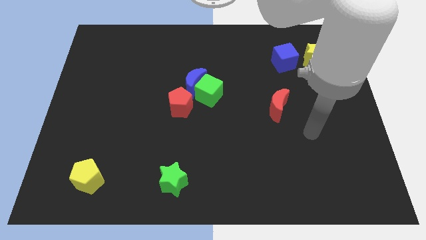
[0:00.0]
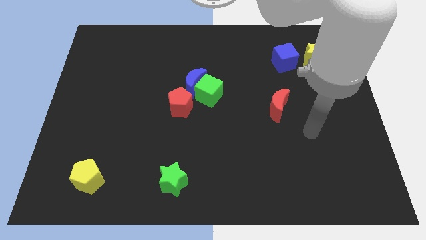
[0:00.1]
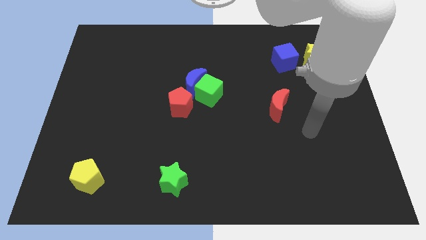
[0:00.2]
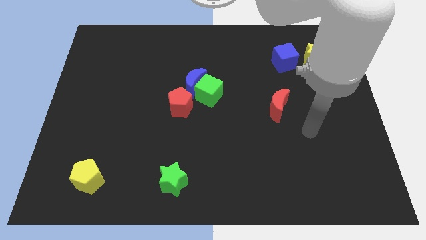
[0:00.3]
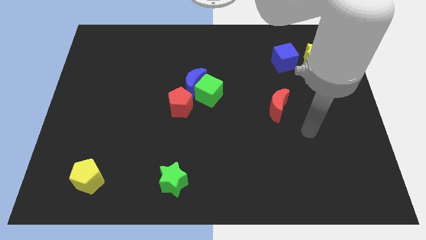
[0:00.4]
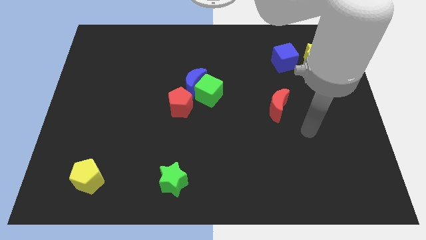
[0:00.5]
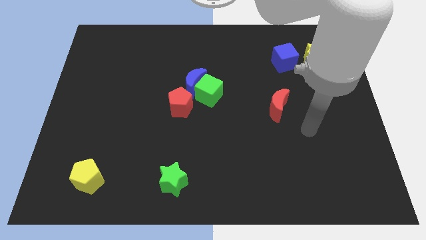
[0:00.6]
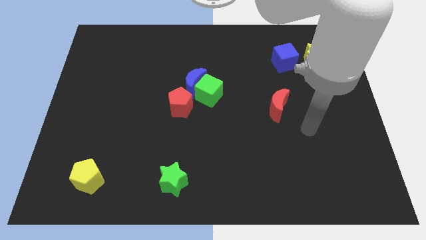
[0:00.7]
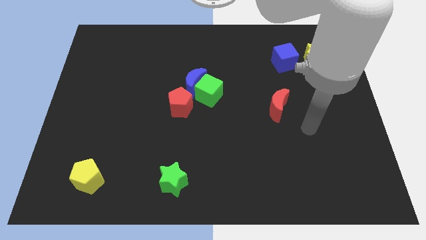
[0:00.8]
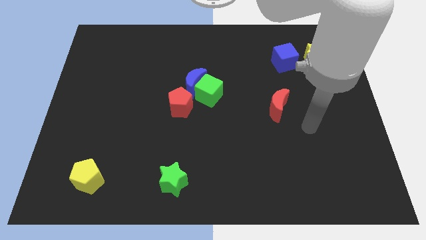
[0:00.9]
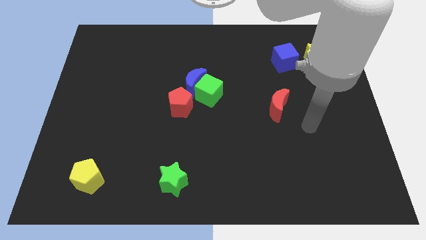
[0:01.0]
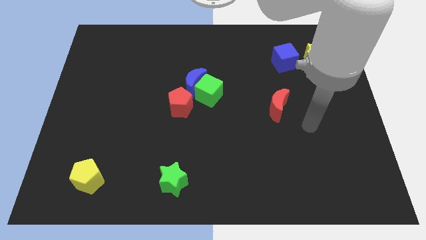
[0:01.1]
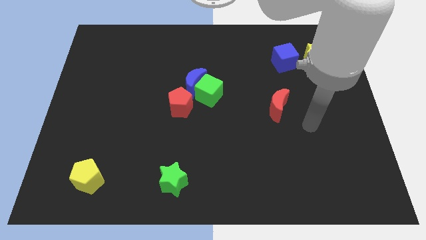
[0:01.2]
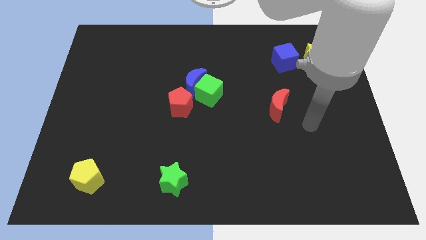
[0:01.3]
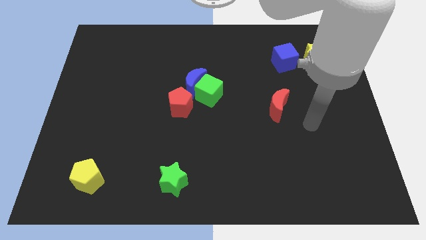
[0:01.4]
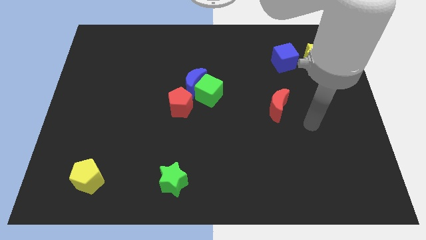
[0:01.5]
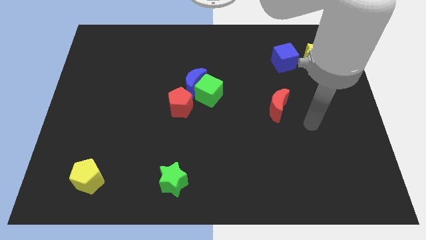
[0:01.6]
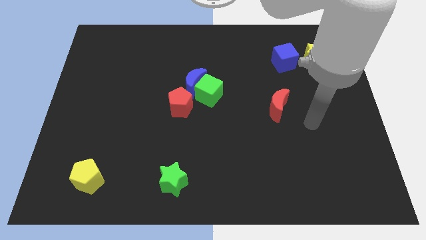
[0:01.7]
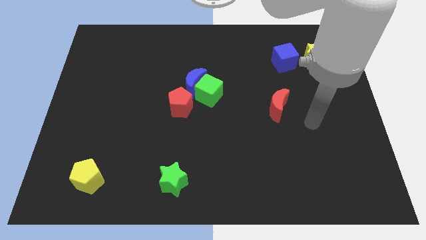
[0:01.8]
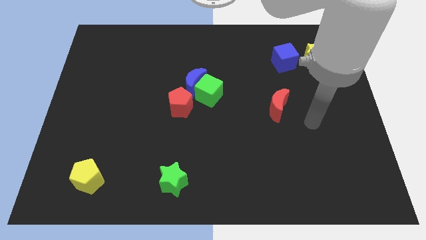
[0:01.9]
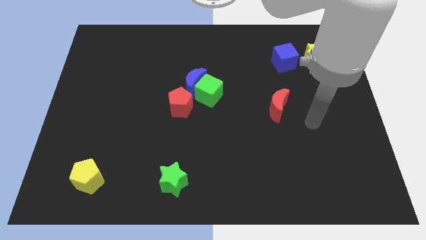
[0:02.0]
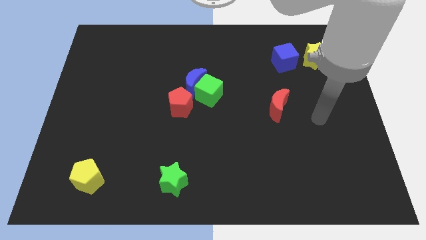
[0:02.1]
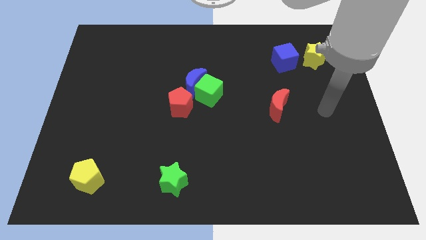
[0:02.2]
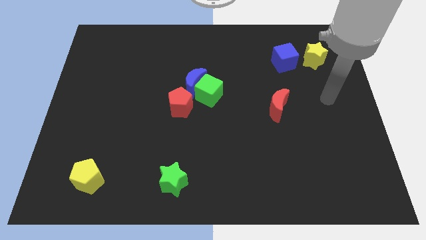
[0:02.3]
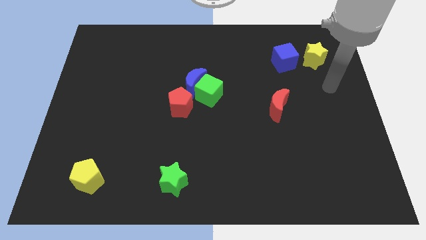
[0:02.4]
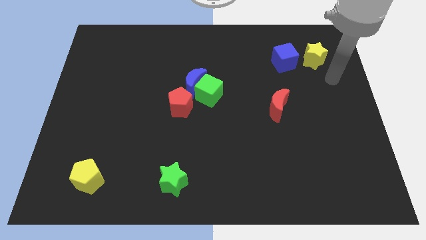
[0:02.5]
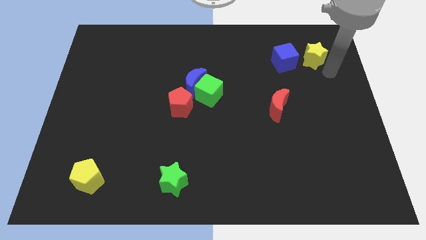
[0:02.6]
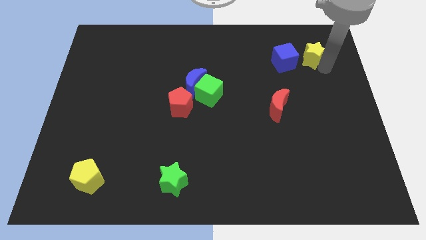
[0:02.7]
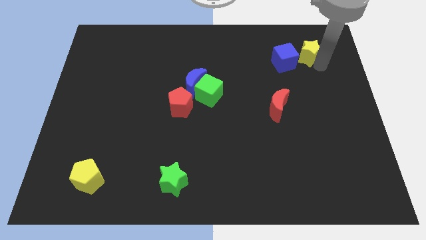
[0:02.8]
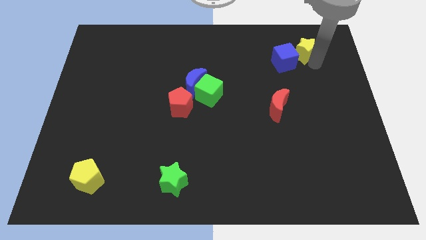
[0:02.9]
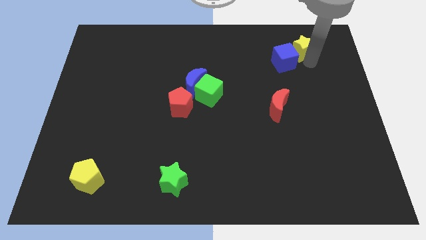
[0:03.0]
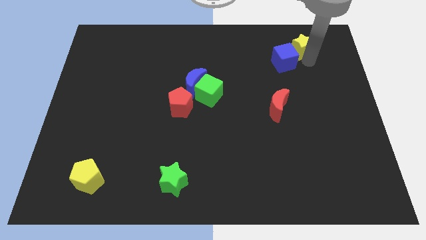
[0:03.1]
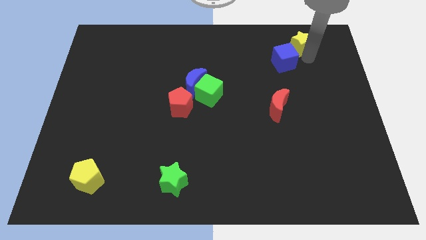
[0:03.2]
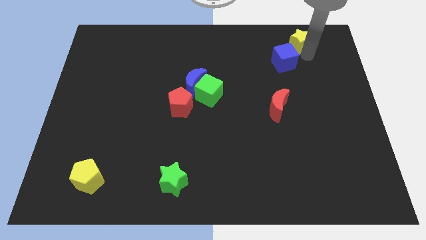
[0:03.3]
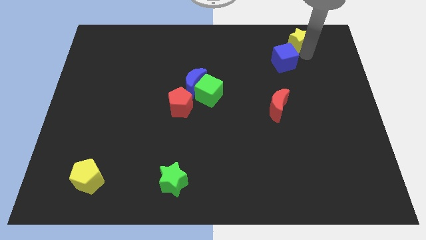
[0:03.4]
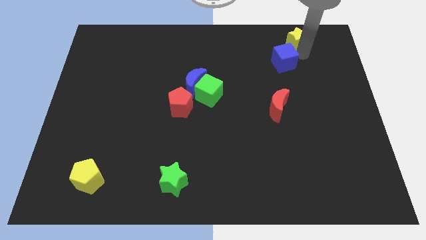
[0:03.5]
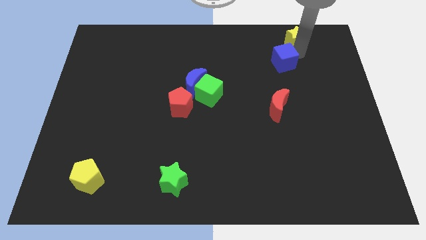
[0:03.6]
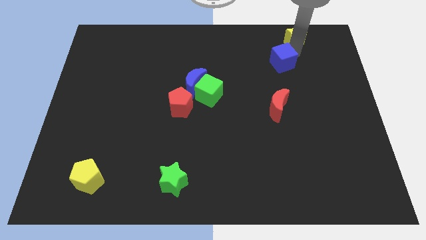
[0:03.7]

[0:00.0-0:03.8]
move the yellow star to the top right side of the blue cube

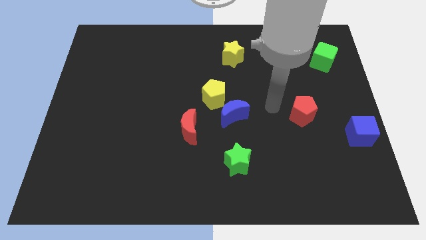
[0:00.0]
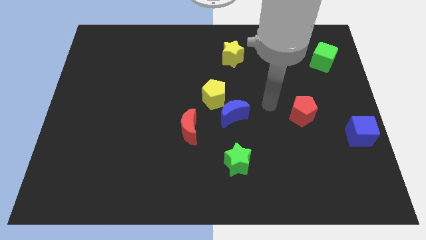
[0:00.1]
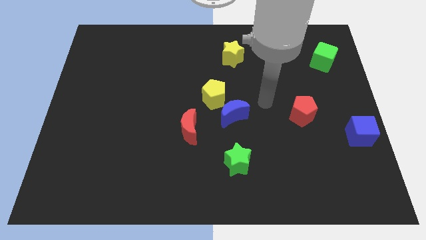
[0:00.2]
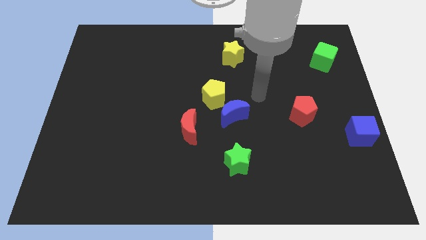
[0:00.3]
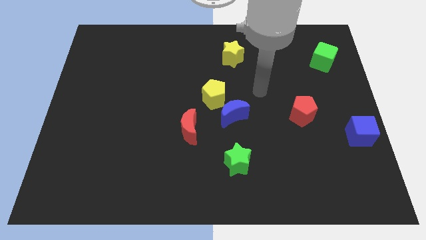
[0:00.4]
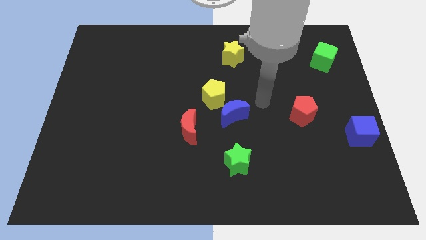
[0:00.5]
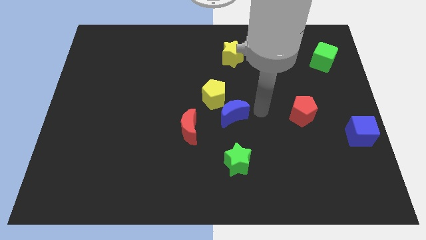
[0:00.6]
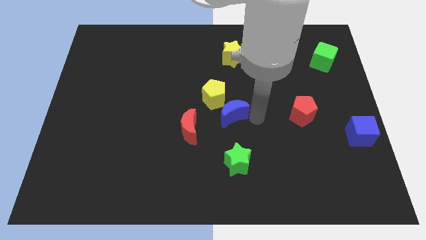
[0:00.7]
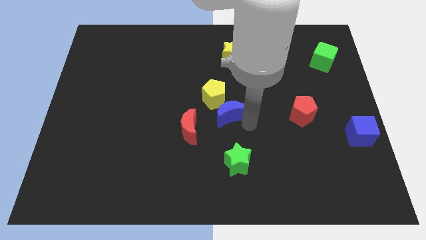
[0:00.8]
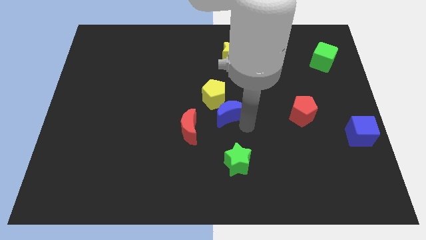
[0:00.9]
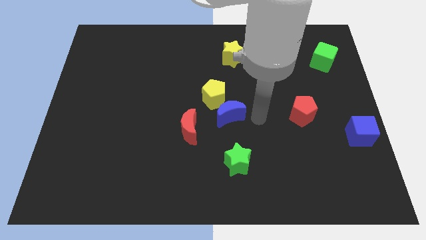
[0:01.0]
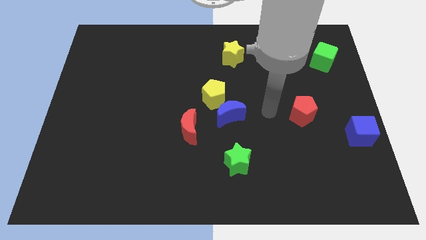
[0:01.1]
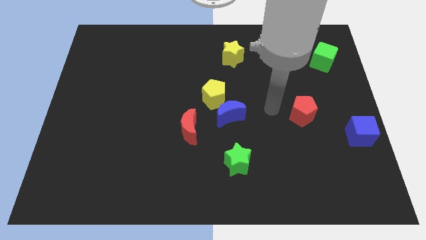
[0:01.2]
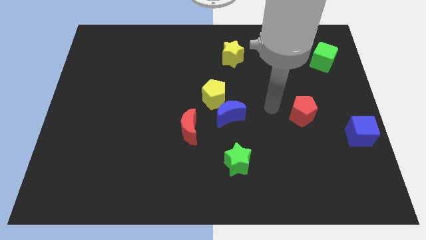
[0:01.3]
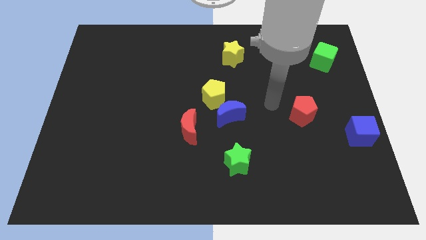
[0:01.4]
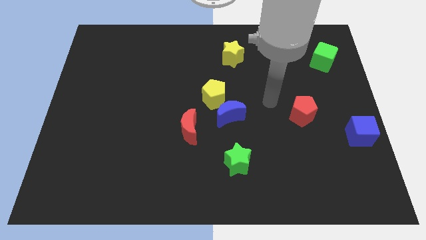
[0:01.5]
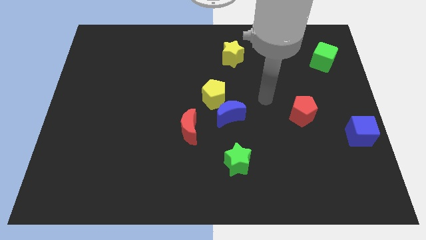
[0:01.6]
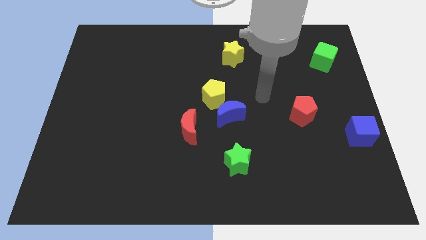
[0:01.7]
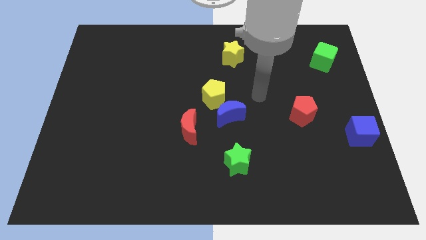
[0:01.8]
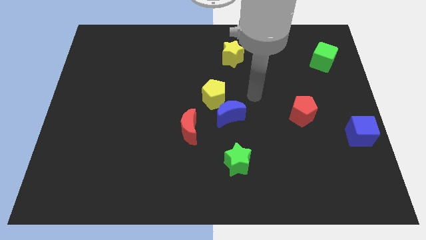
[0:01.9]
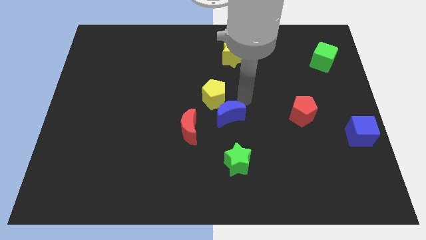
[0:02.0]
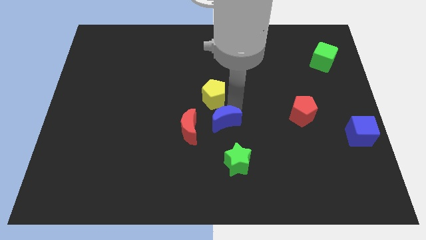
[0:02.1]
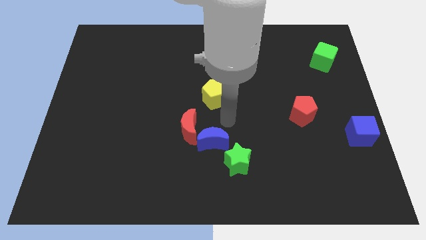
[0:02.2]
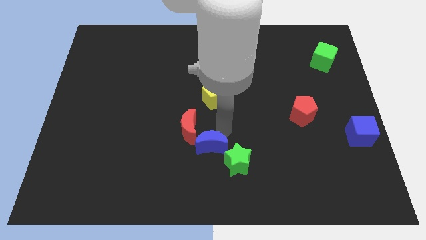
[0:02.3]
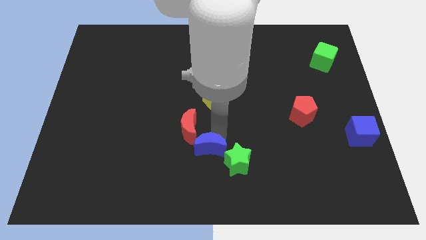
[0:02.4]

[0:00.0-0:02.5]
place the blue crescent between the red crescent and green star

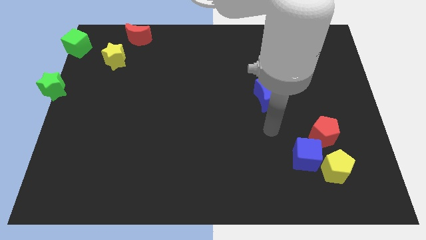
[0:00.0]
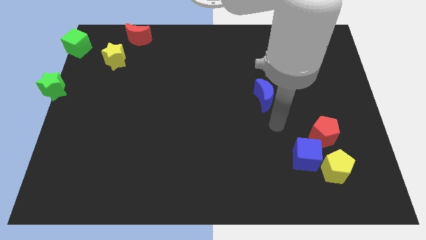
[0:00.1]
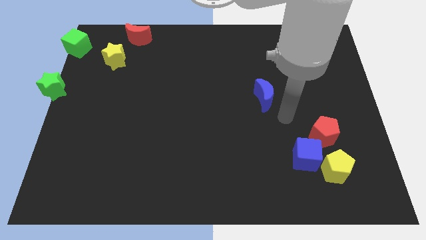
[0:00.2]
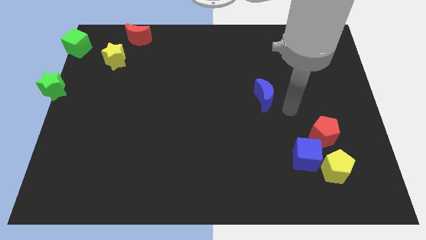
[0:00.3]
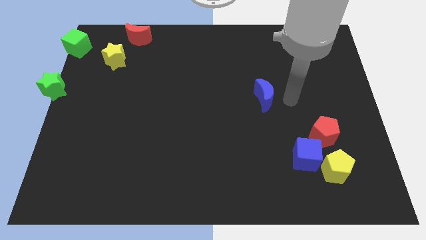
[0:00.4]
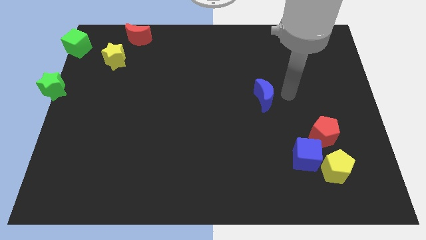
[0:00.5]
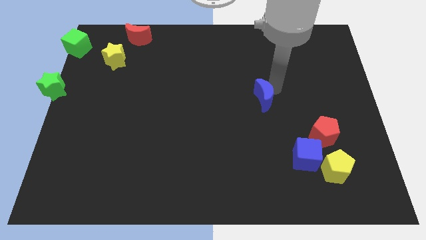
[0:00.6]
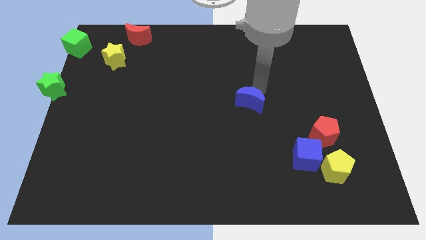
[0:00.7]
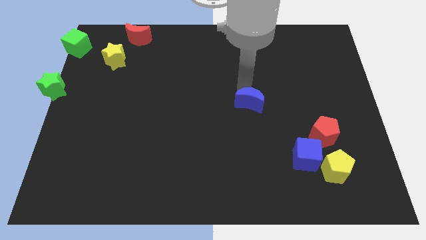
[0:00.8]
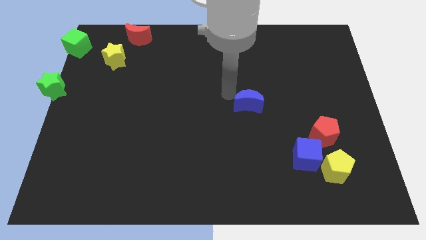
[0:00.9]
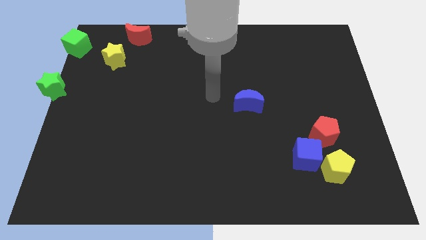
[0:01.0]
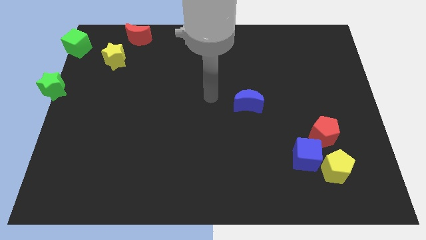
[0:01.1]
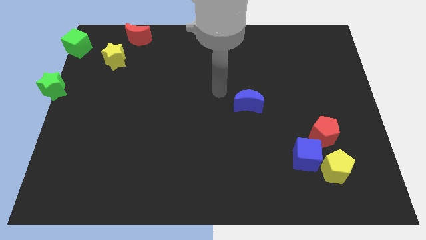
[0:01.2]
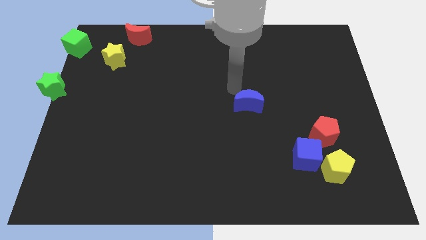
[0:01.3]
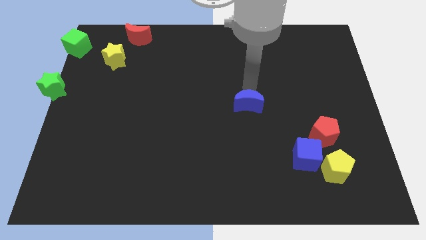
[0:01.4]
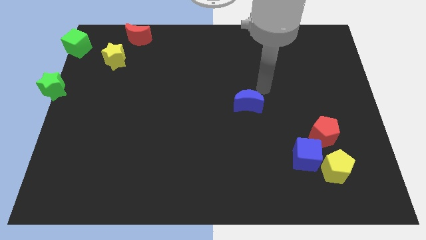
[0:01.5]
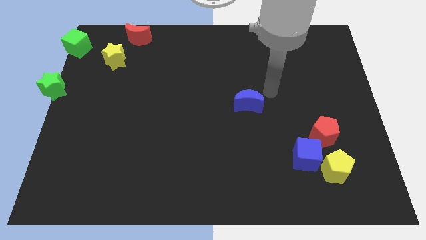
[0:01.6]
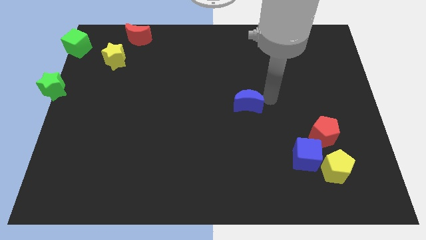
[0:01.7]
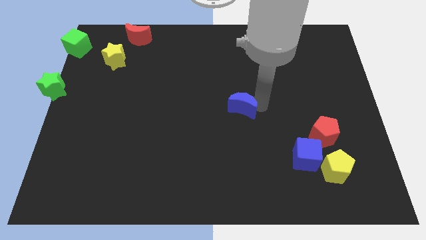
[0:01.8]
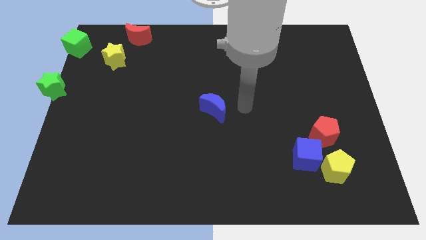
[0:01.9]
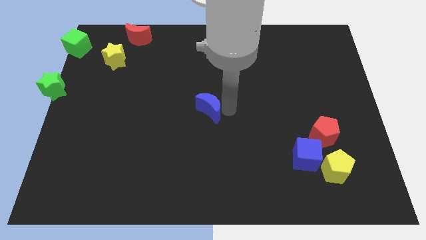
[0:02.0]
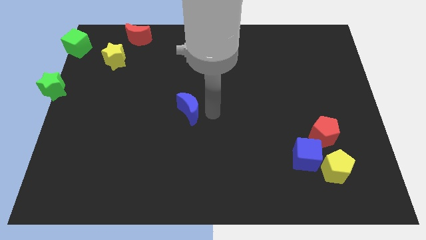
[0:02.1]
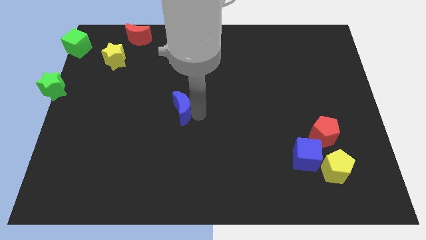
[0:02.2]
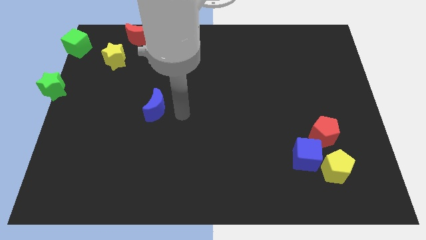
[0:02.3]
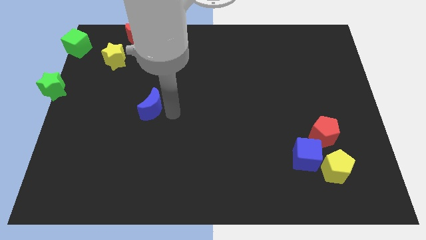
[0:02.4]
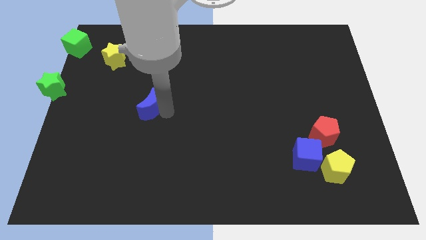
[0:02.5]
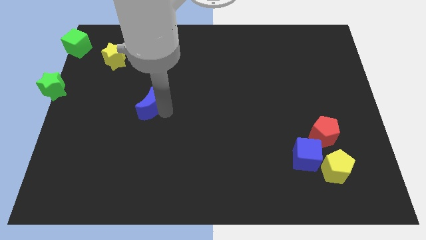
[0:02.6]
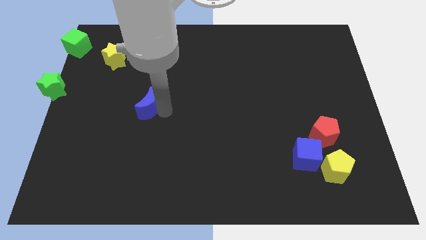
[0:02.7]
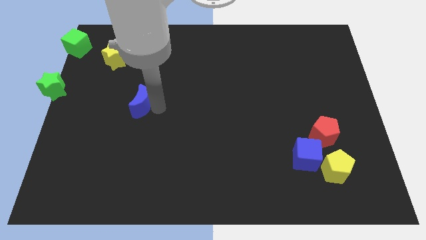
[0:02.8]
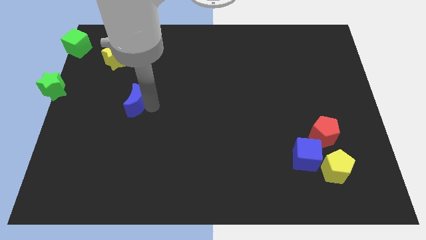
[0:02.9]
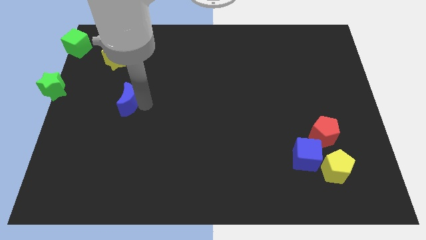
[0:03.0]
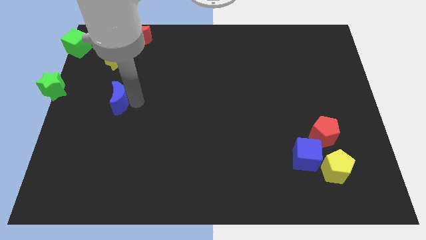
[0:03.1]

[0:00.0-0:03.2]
move blue moon below the yellow star
